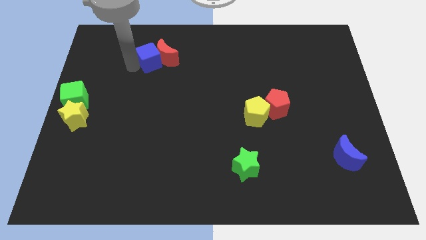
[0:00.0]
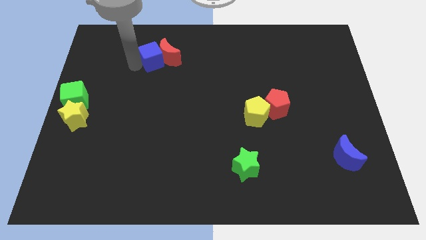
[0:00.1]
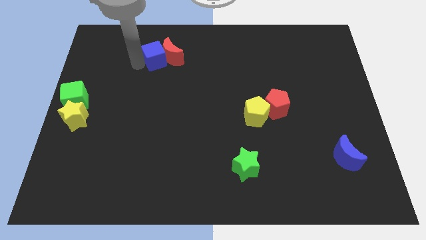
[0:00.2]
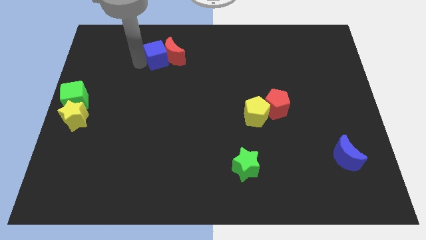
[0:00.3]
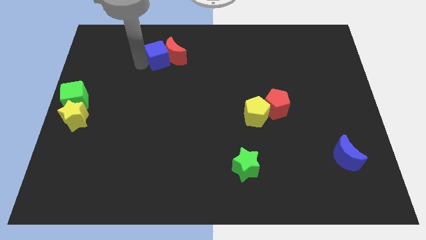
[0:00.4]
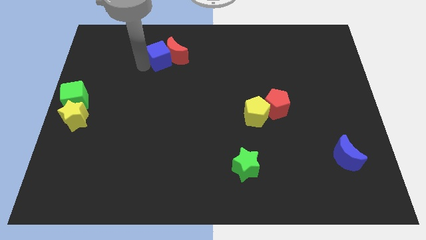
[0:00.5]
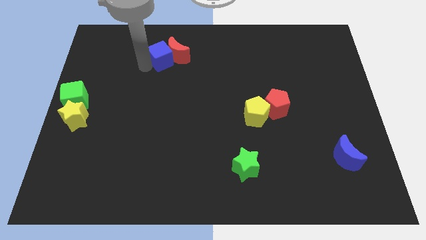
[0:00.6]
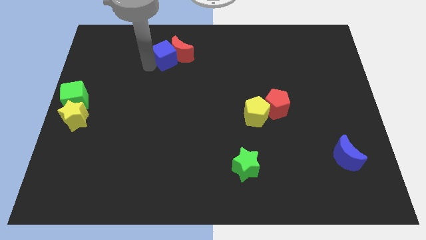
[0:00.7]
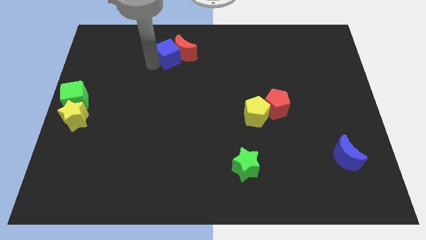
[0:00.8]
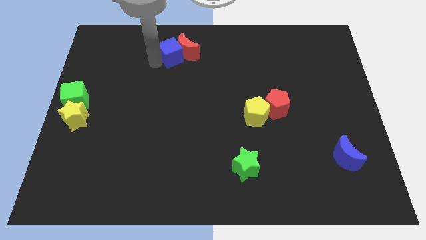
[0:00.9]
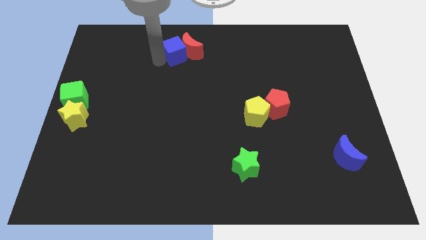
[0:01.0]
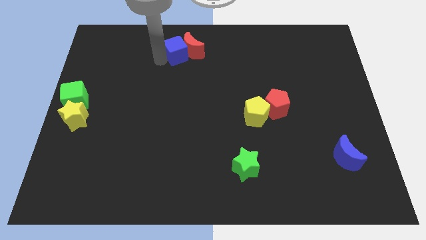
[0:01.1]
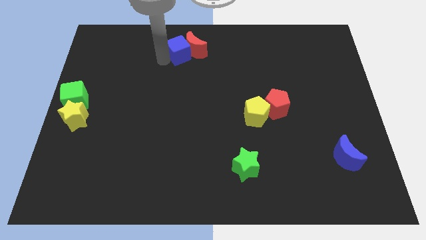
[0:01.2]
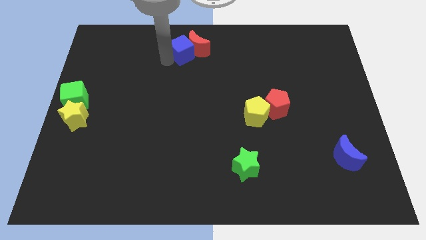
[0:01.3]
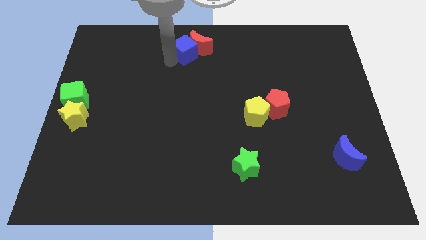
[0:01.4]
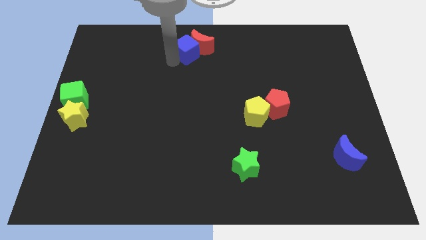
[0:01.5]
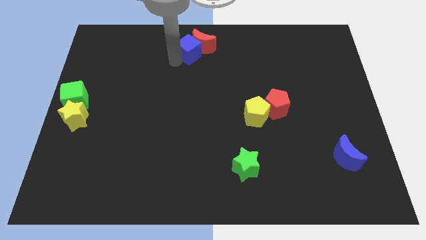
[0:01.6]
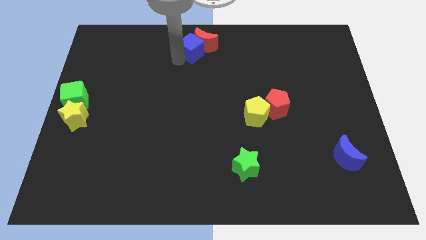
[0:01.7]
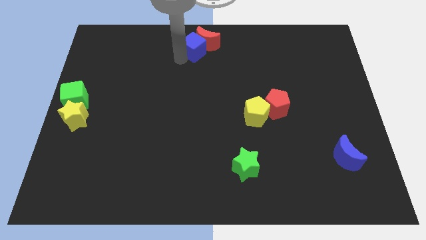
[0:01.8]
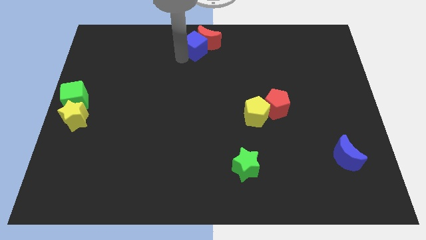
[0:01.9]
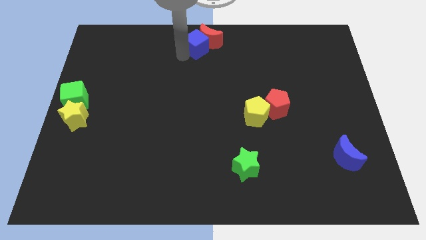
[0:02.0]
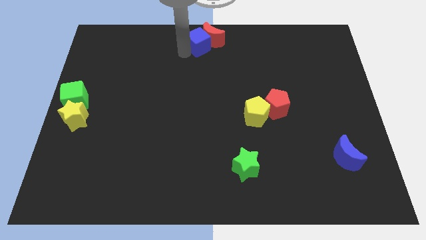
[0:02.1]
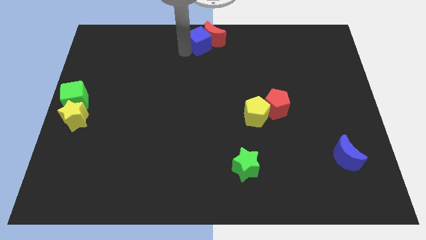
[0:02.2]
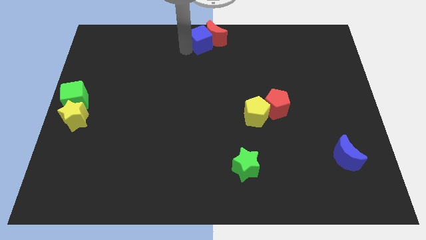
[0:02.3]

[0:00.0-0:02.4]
push the blue cube and red moon to the top side

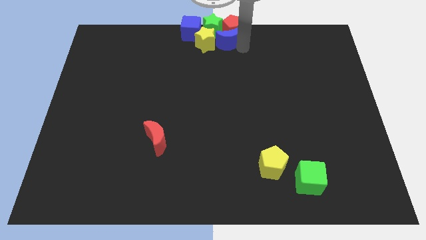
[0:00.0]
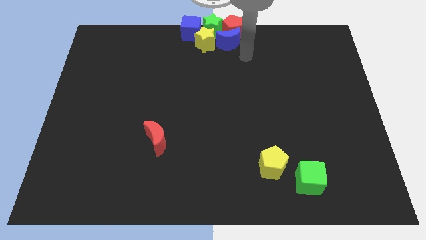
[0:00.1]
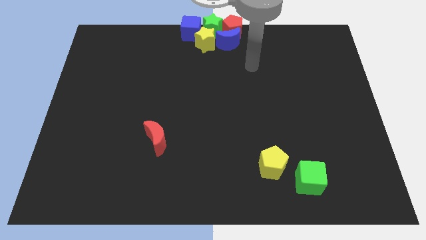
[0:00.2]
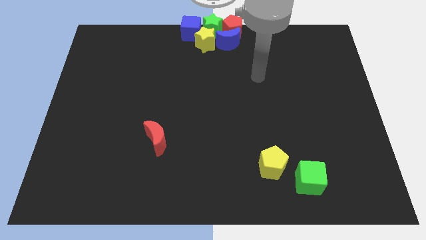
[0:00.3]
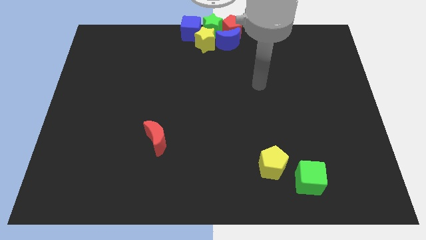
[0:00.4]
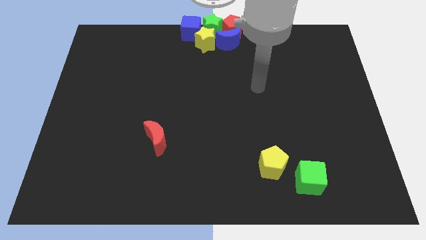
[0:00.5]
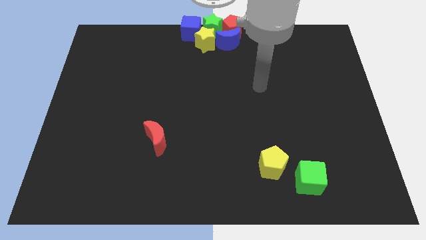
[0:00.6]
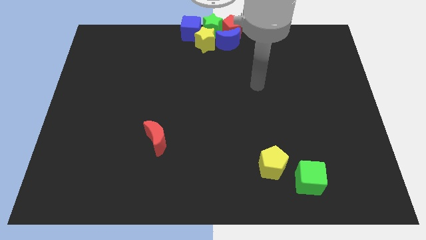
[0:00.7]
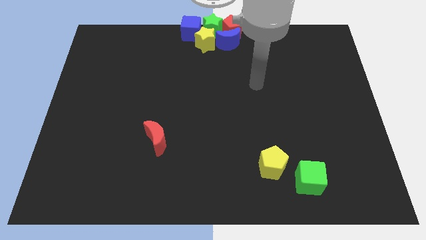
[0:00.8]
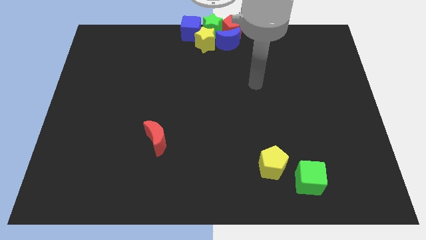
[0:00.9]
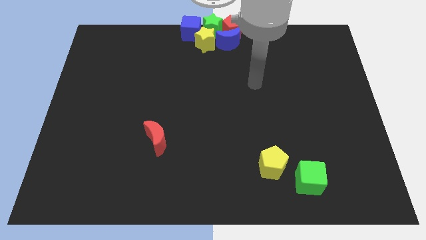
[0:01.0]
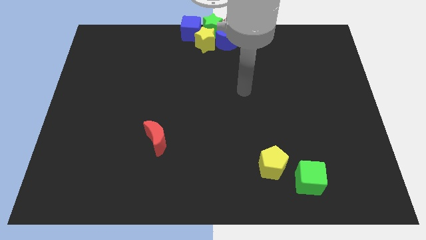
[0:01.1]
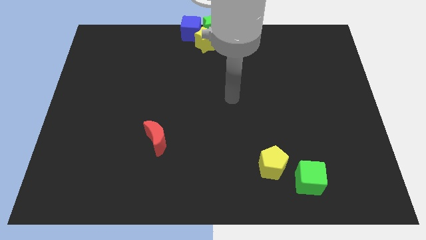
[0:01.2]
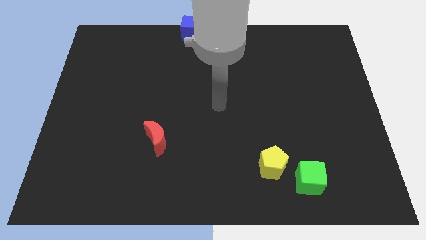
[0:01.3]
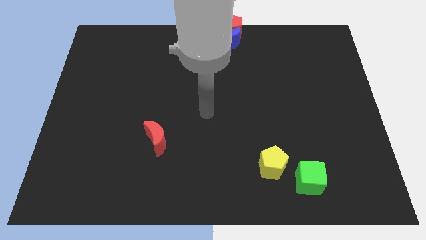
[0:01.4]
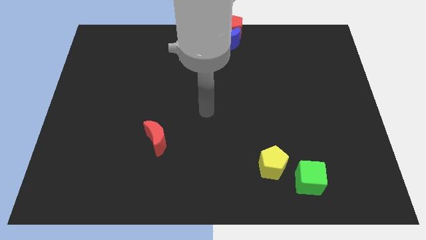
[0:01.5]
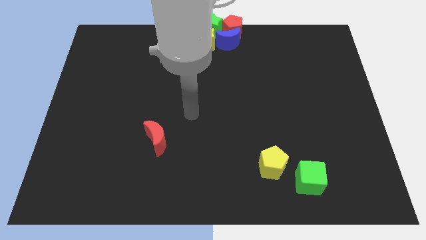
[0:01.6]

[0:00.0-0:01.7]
move your arm away from blue moon

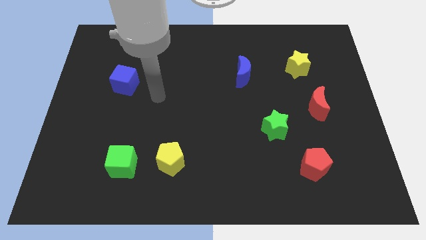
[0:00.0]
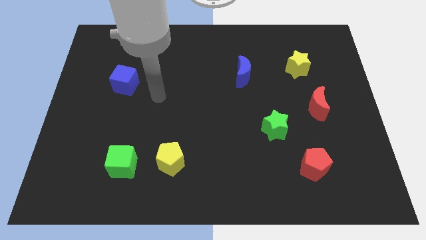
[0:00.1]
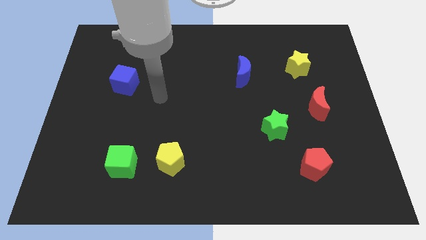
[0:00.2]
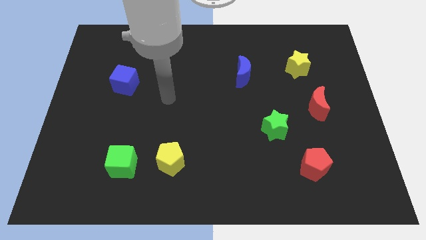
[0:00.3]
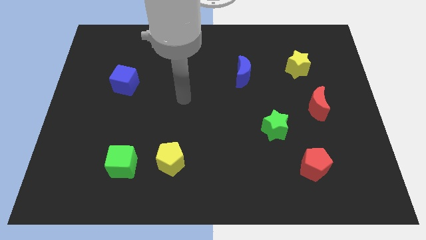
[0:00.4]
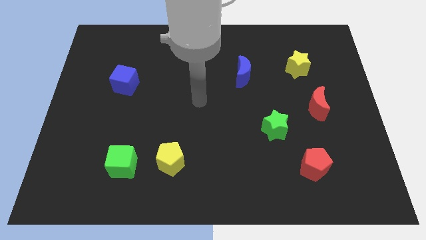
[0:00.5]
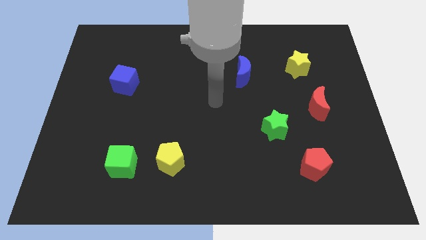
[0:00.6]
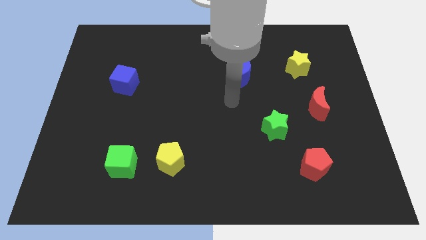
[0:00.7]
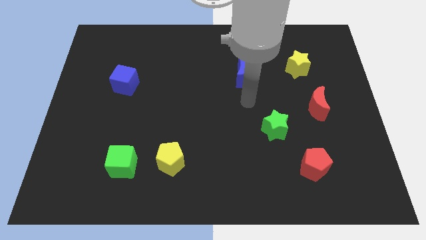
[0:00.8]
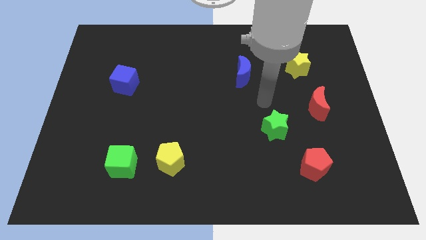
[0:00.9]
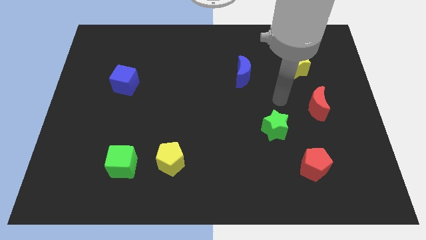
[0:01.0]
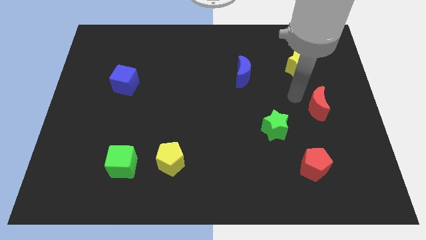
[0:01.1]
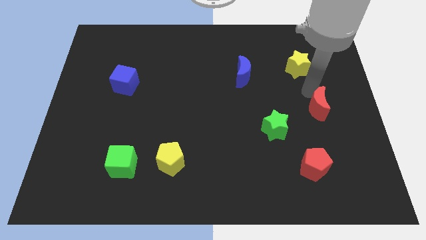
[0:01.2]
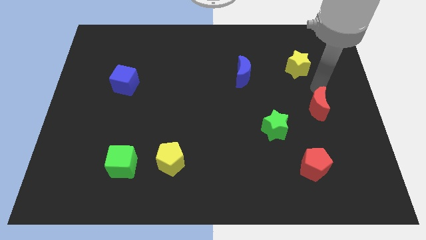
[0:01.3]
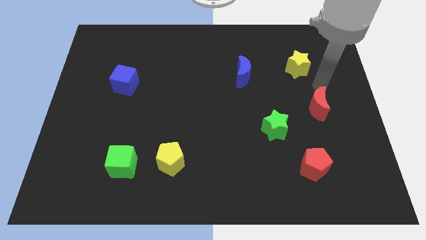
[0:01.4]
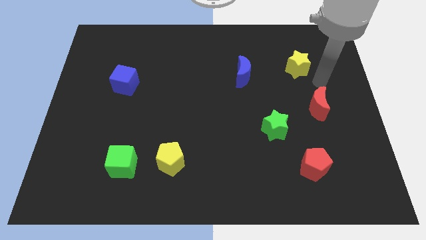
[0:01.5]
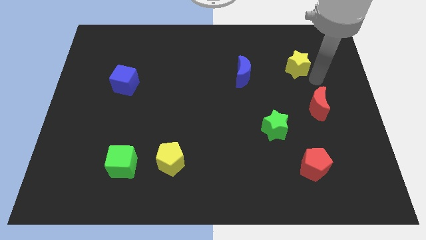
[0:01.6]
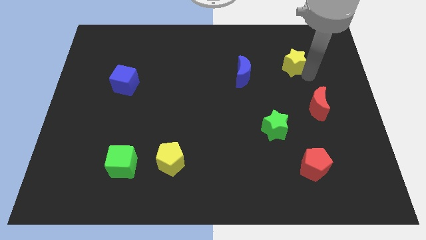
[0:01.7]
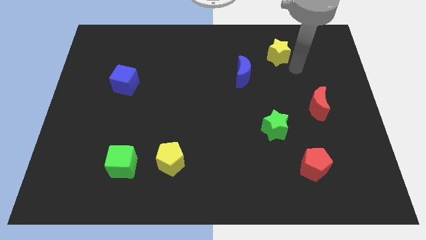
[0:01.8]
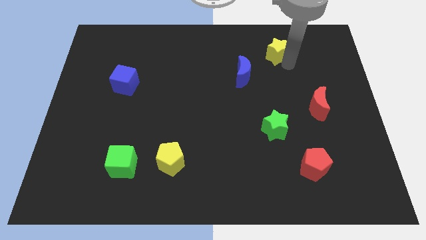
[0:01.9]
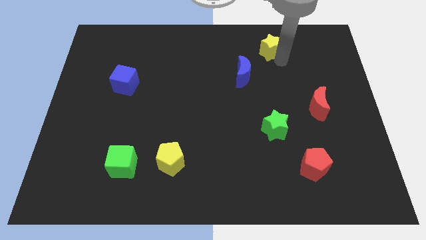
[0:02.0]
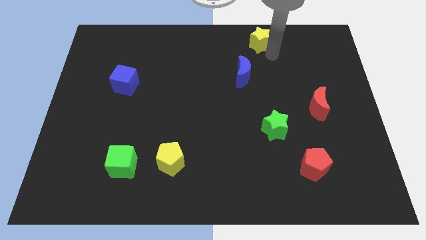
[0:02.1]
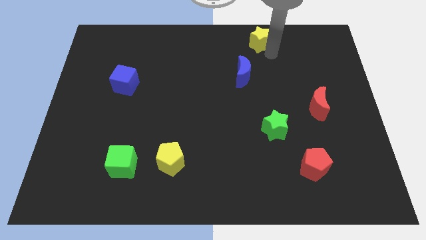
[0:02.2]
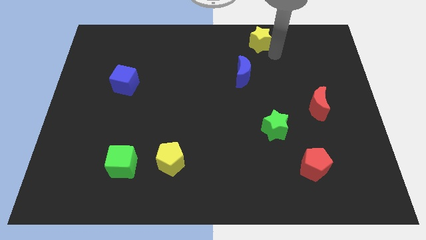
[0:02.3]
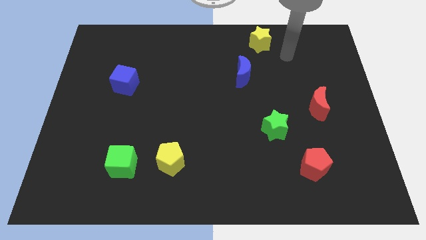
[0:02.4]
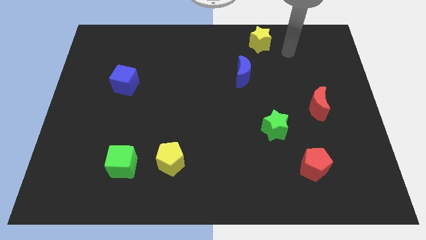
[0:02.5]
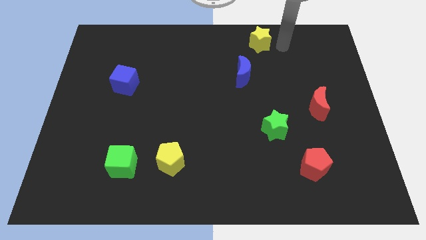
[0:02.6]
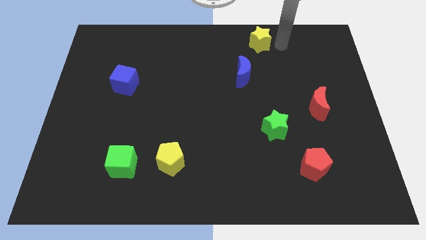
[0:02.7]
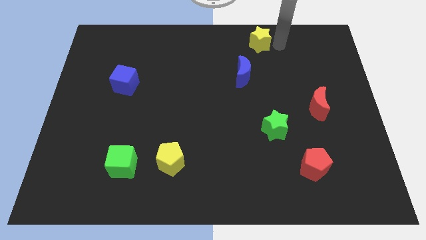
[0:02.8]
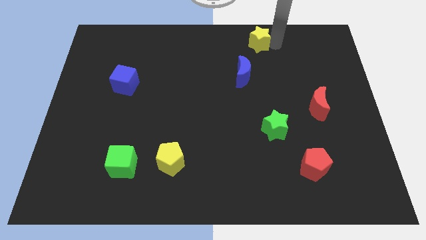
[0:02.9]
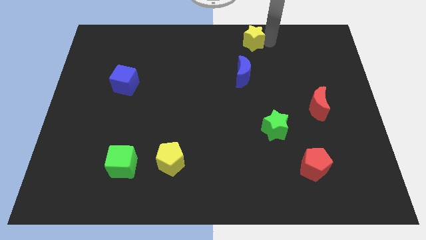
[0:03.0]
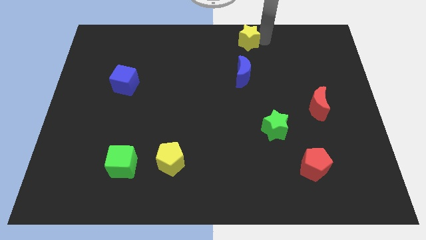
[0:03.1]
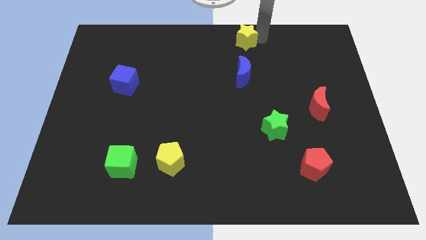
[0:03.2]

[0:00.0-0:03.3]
place the yellow star to top of the blue moon

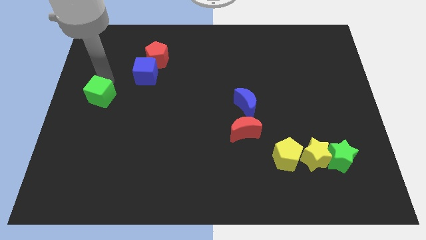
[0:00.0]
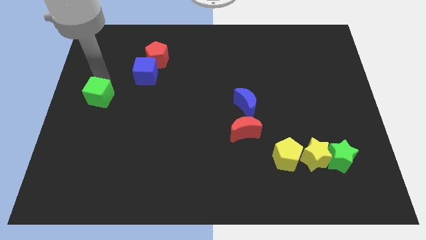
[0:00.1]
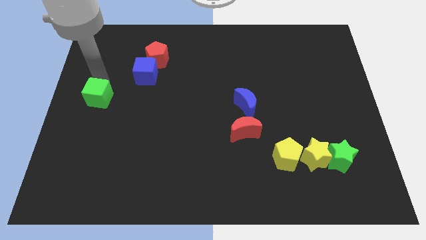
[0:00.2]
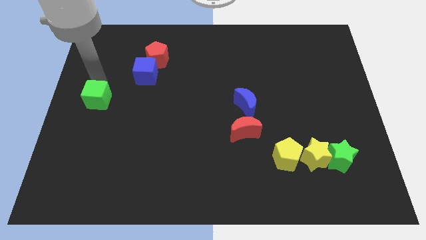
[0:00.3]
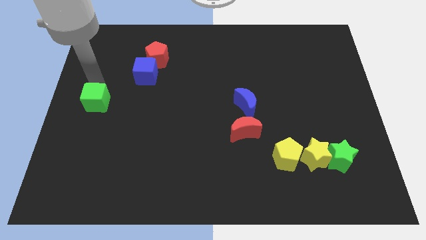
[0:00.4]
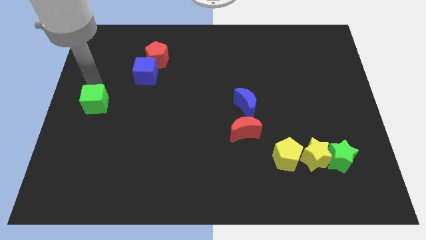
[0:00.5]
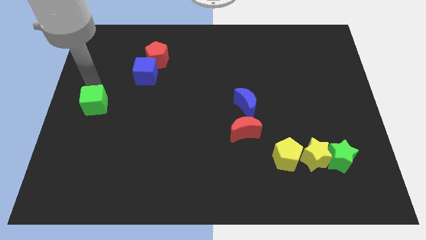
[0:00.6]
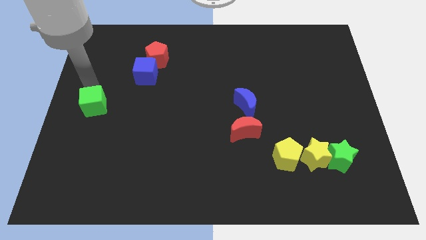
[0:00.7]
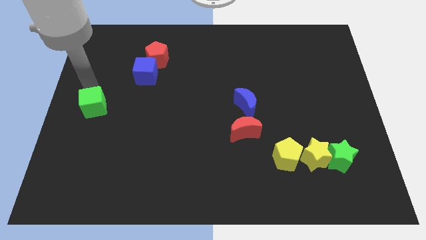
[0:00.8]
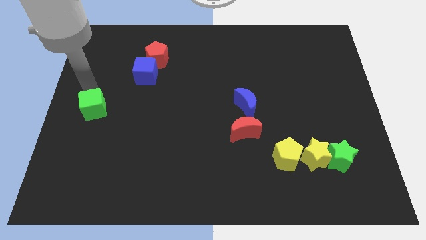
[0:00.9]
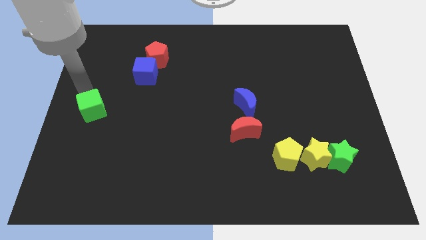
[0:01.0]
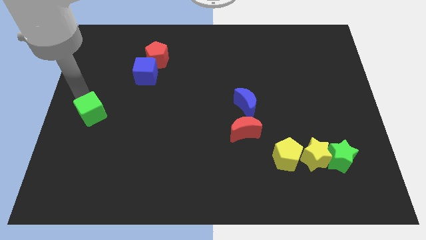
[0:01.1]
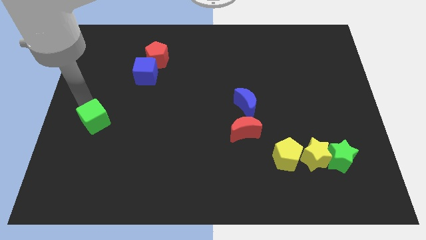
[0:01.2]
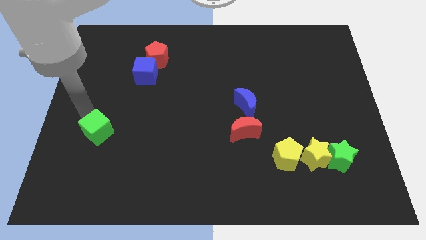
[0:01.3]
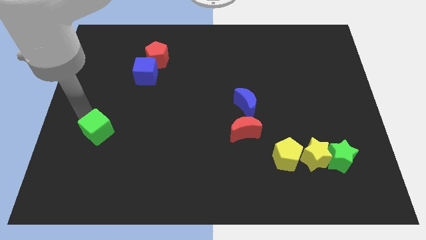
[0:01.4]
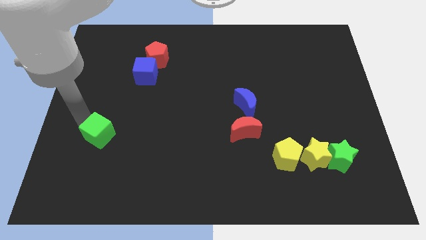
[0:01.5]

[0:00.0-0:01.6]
move the green cube towards the bottom
